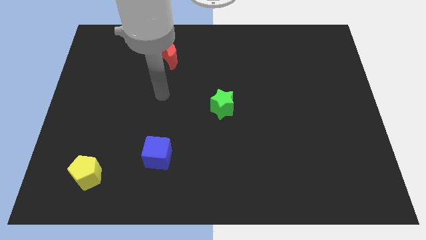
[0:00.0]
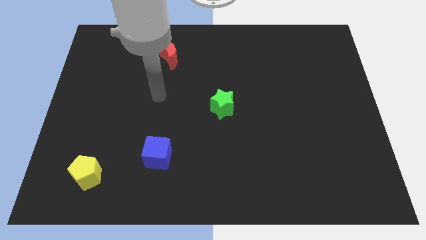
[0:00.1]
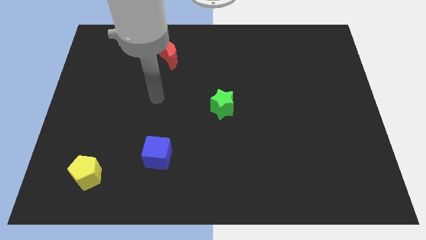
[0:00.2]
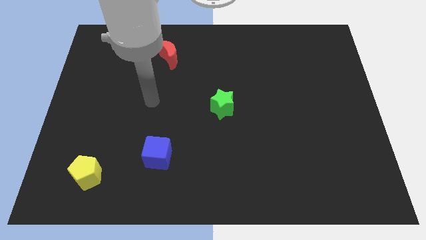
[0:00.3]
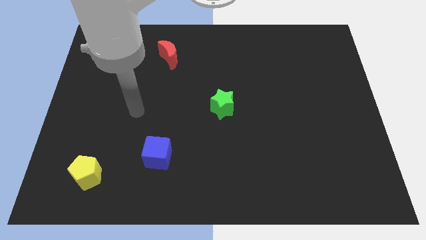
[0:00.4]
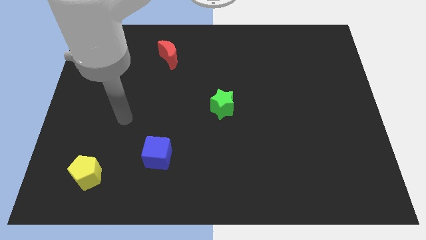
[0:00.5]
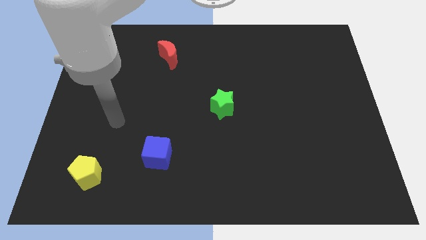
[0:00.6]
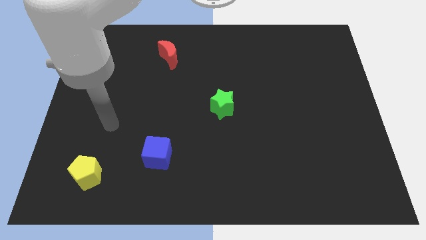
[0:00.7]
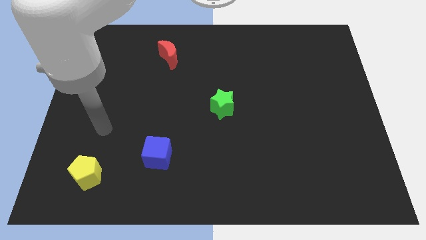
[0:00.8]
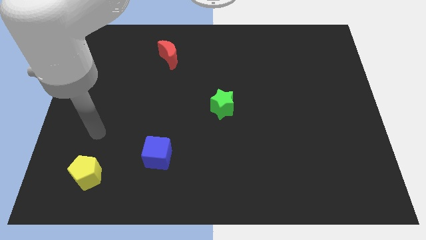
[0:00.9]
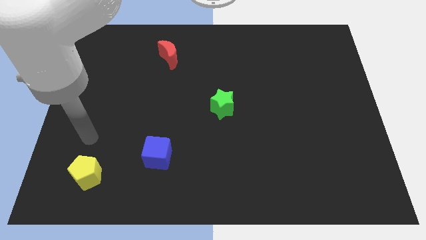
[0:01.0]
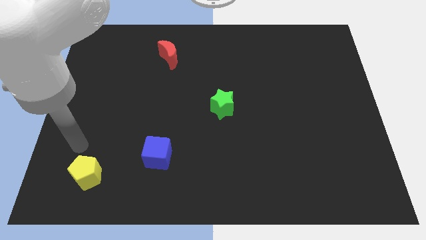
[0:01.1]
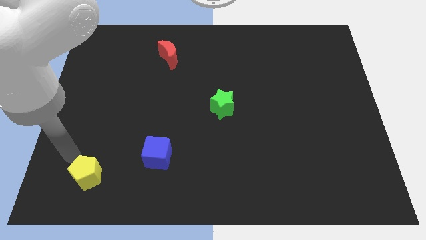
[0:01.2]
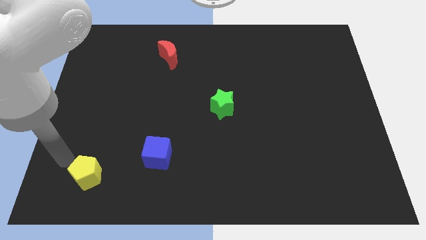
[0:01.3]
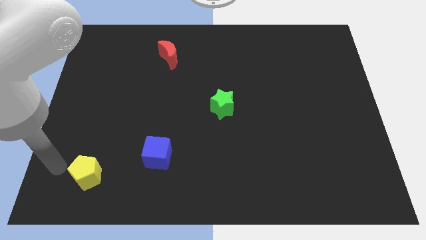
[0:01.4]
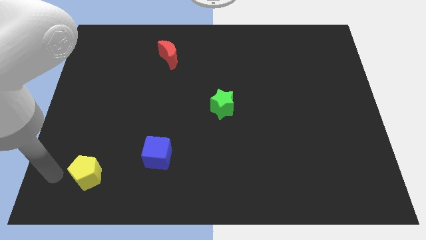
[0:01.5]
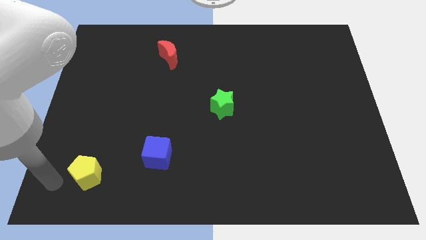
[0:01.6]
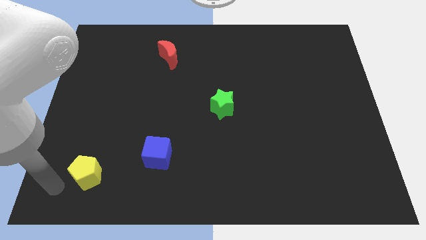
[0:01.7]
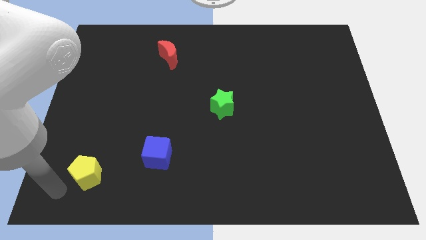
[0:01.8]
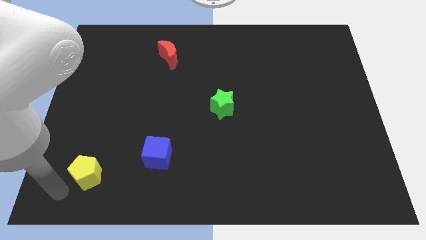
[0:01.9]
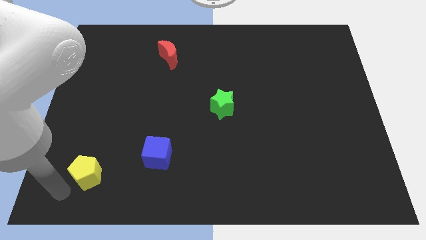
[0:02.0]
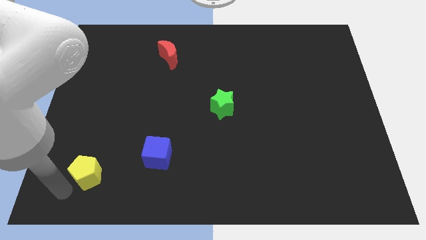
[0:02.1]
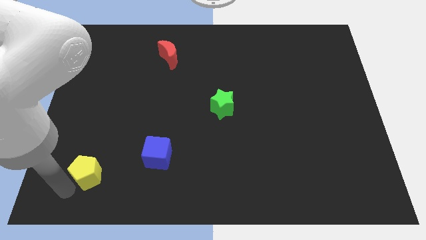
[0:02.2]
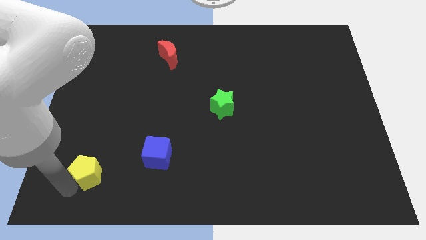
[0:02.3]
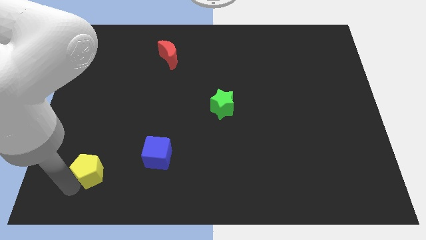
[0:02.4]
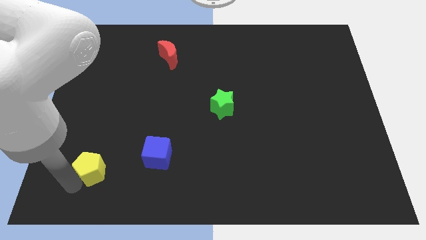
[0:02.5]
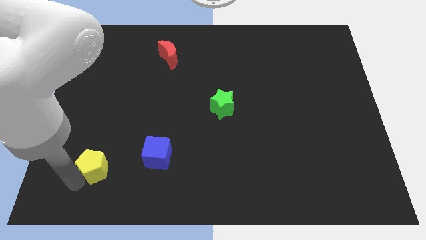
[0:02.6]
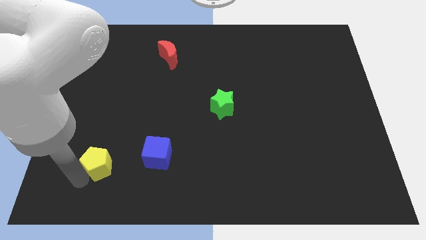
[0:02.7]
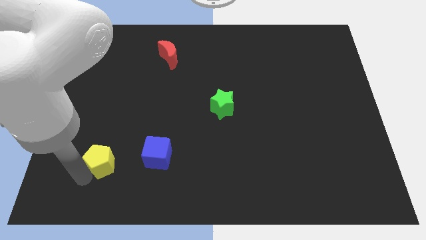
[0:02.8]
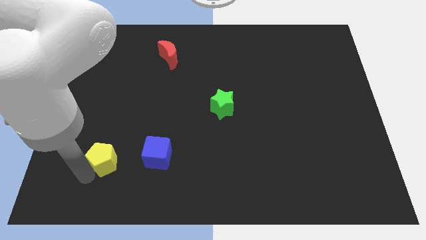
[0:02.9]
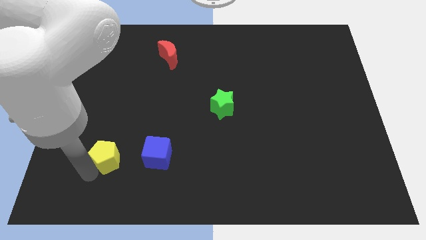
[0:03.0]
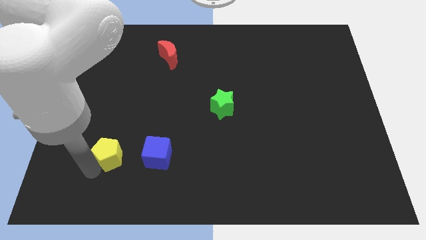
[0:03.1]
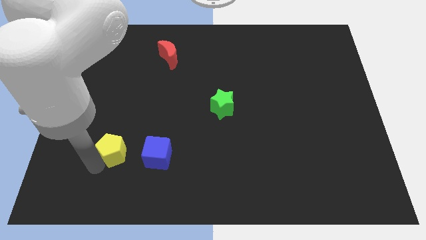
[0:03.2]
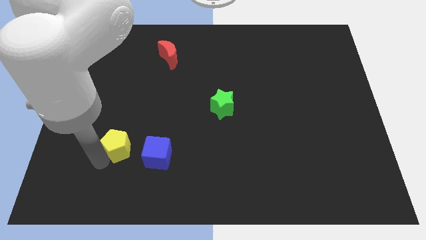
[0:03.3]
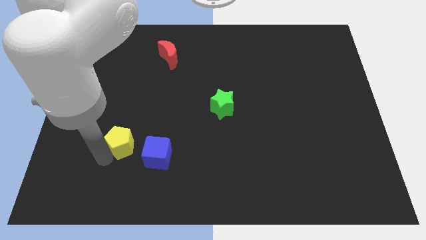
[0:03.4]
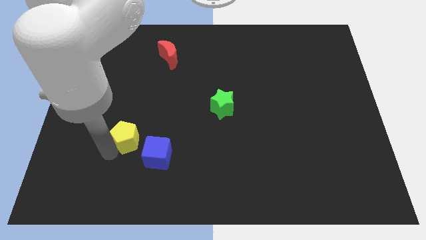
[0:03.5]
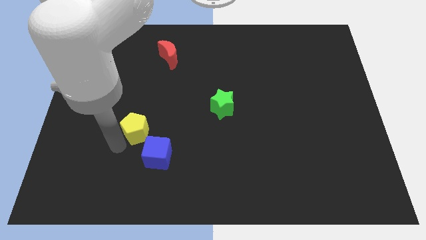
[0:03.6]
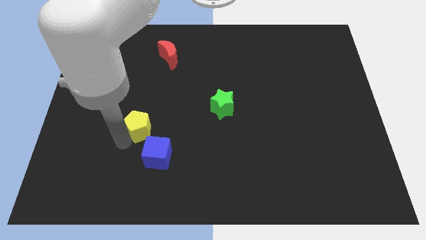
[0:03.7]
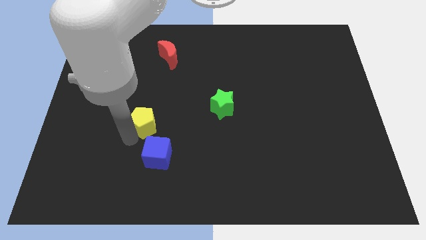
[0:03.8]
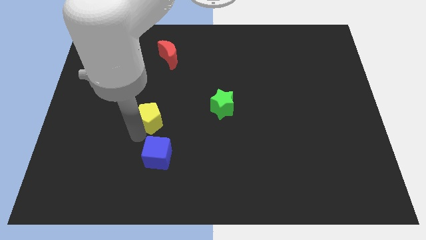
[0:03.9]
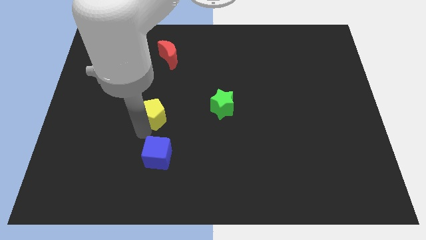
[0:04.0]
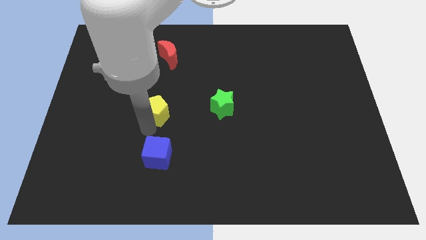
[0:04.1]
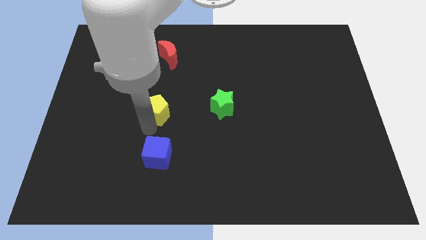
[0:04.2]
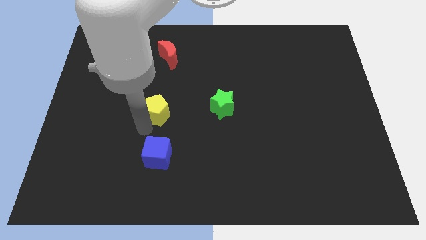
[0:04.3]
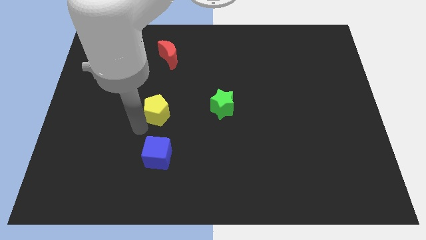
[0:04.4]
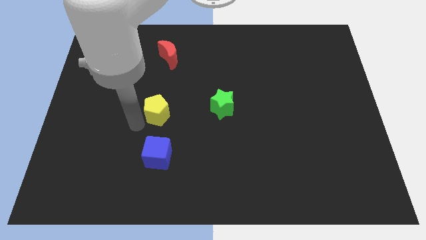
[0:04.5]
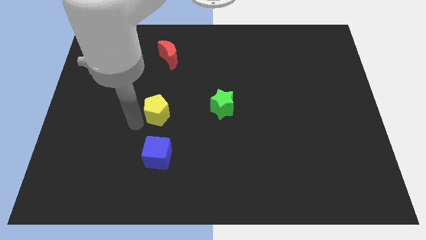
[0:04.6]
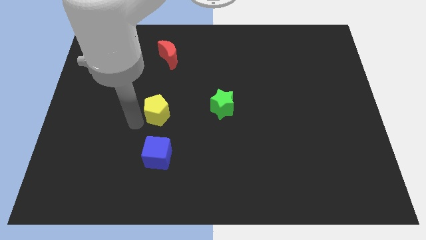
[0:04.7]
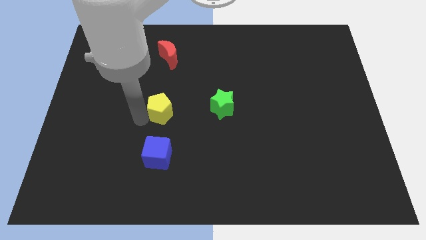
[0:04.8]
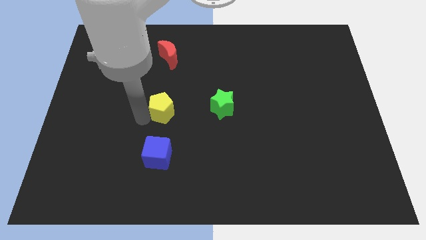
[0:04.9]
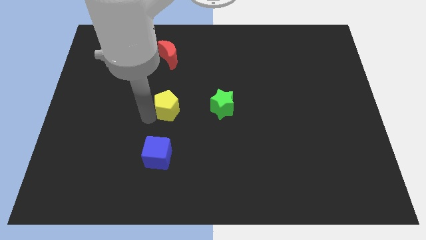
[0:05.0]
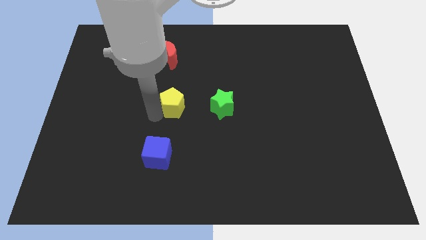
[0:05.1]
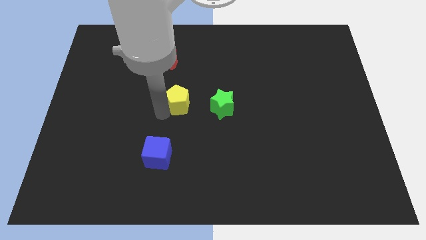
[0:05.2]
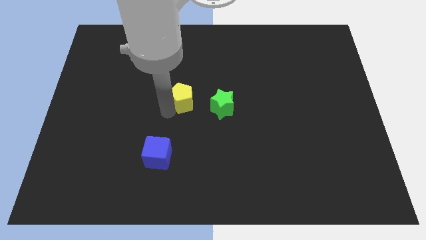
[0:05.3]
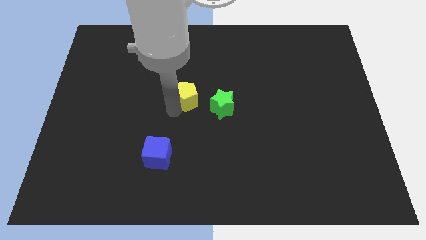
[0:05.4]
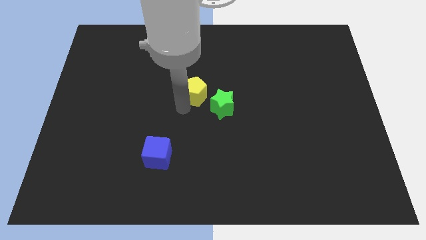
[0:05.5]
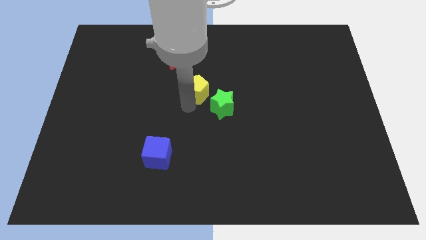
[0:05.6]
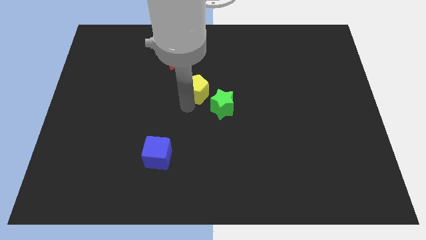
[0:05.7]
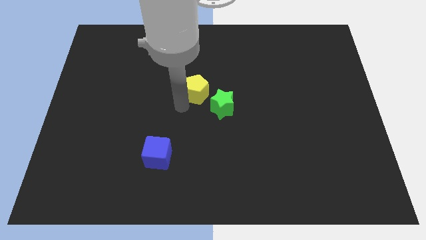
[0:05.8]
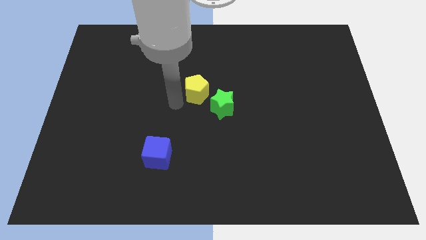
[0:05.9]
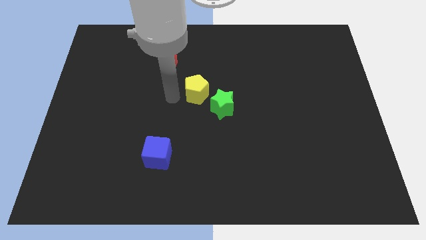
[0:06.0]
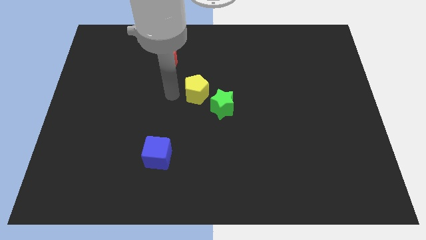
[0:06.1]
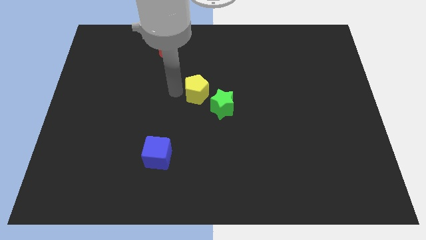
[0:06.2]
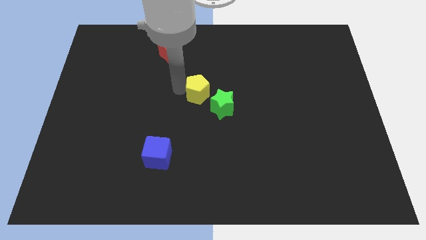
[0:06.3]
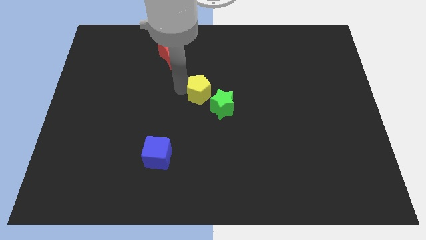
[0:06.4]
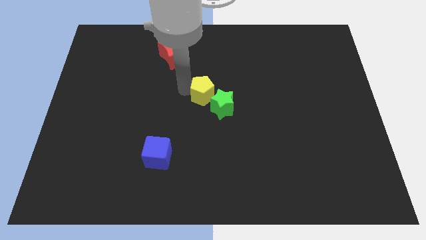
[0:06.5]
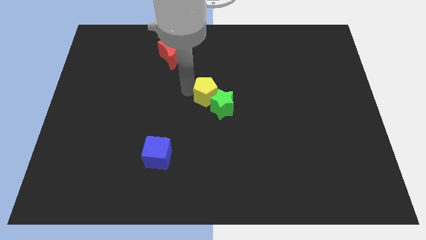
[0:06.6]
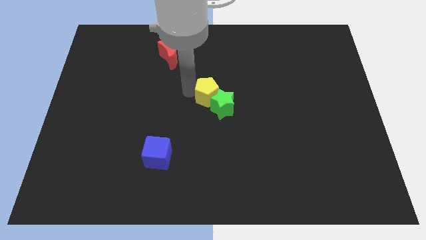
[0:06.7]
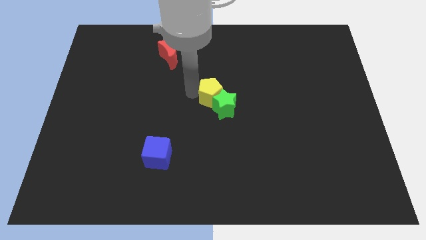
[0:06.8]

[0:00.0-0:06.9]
put the yellow block next to the green star

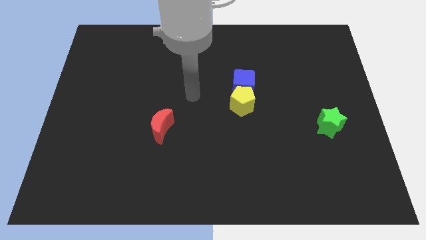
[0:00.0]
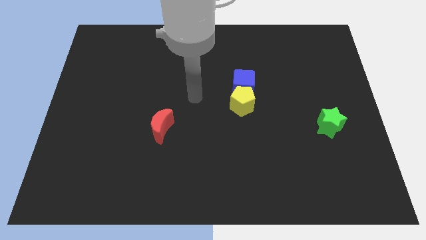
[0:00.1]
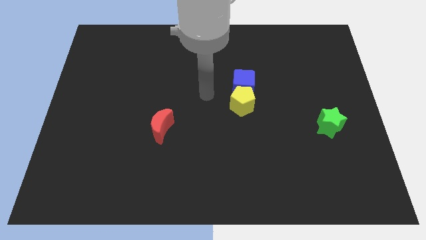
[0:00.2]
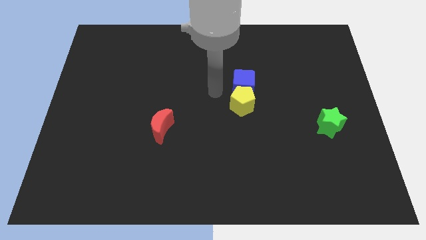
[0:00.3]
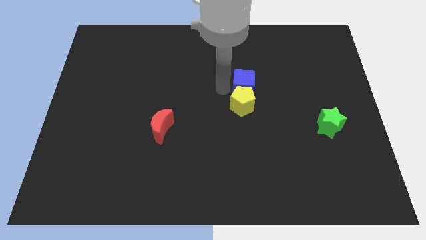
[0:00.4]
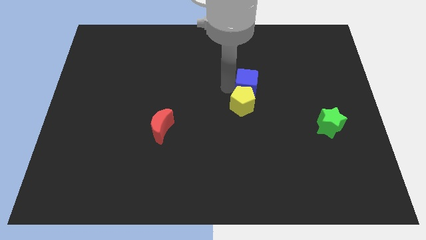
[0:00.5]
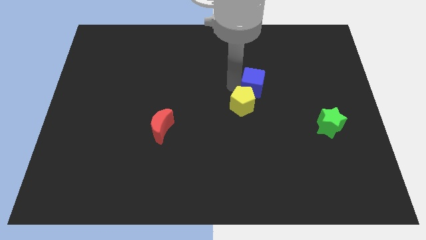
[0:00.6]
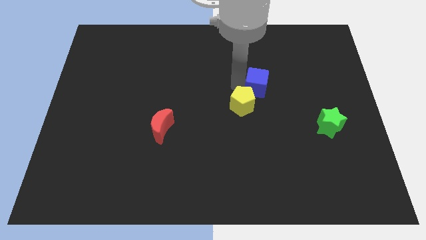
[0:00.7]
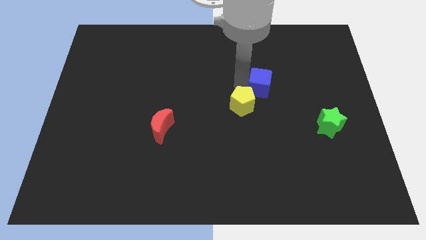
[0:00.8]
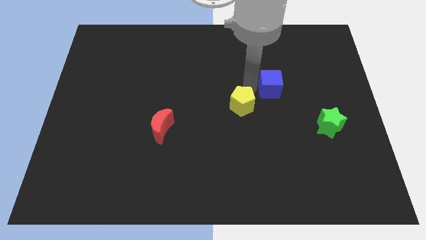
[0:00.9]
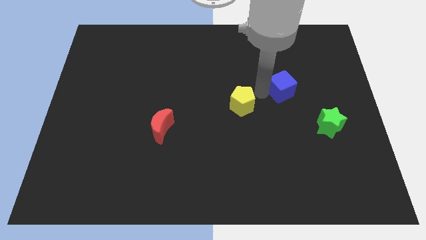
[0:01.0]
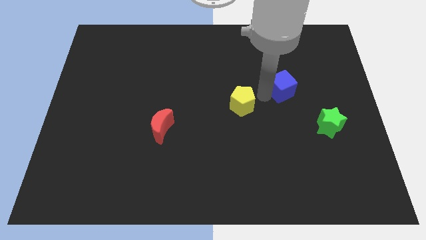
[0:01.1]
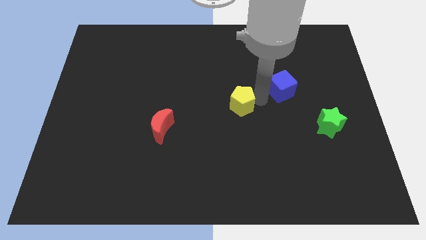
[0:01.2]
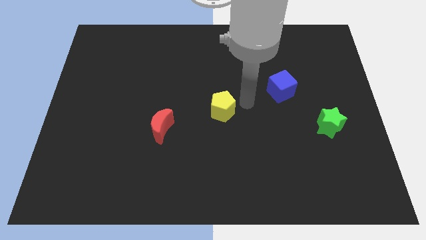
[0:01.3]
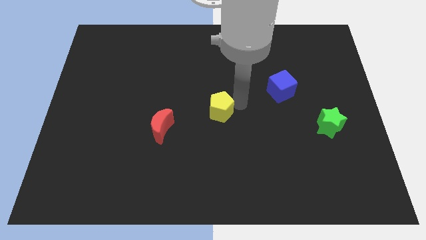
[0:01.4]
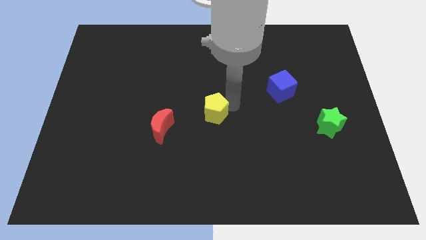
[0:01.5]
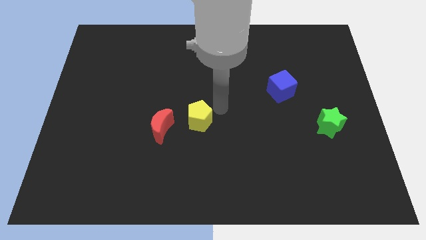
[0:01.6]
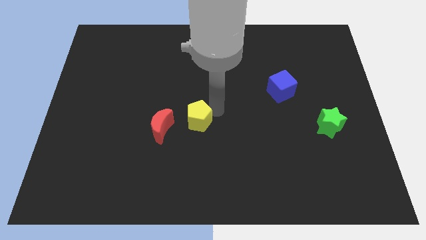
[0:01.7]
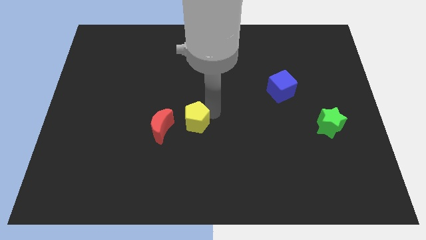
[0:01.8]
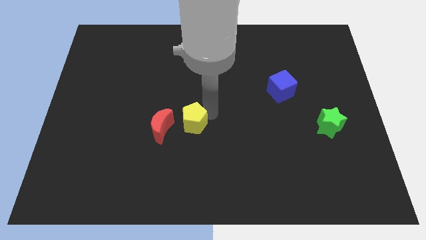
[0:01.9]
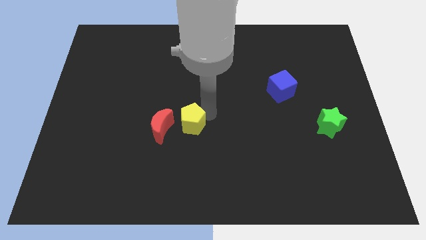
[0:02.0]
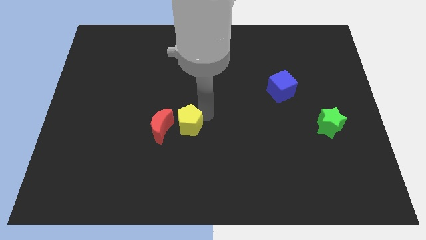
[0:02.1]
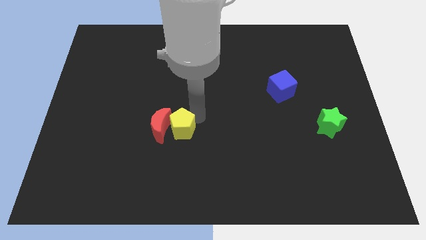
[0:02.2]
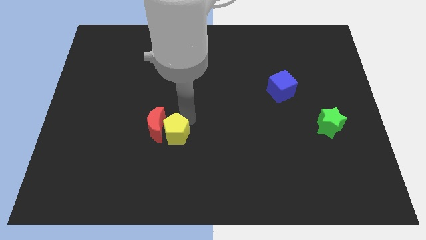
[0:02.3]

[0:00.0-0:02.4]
push the yellow pentagon to the moon
